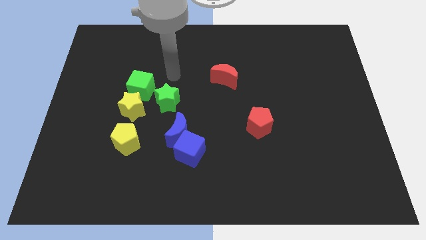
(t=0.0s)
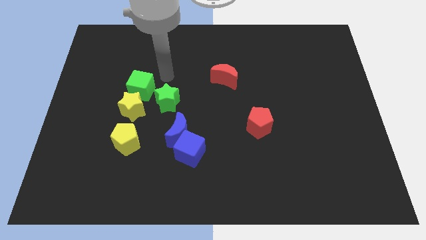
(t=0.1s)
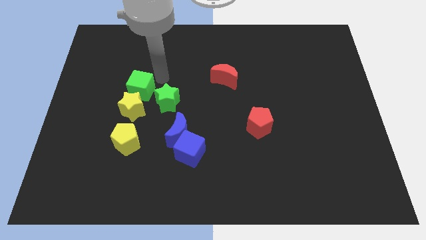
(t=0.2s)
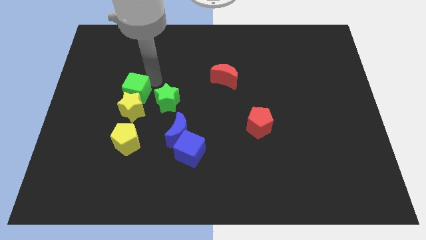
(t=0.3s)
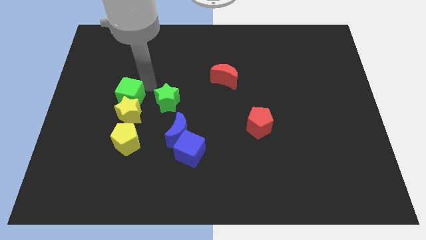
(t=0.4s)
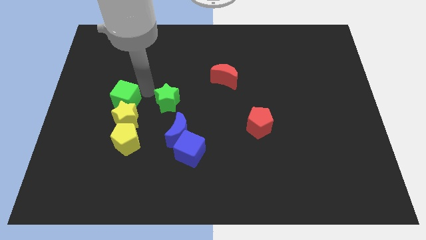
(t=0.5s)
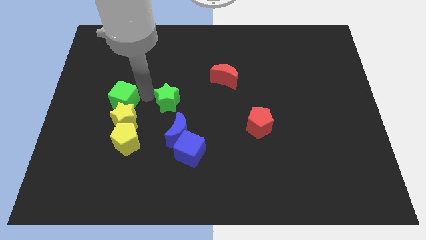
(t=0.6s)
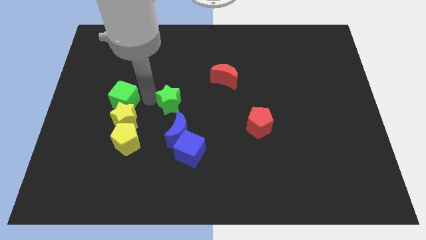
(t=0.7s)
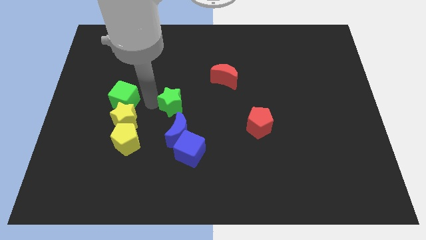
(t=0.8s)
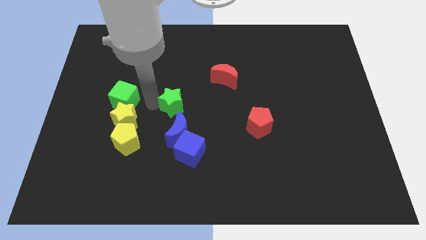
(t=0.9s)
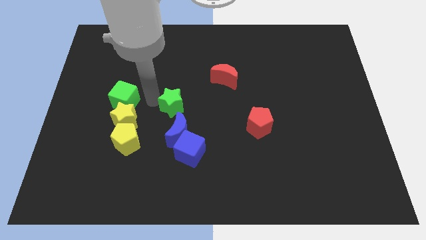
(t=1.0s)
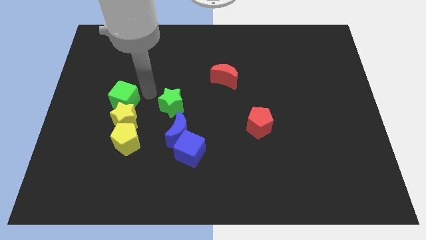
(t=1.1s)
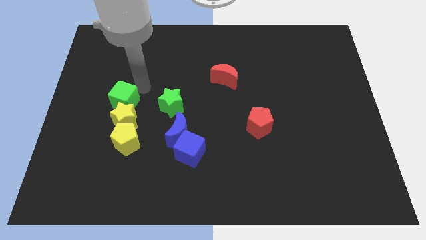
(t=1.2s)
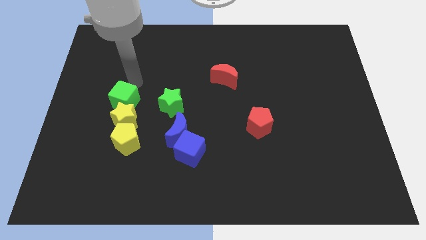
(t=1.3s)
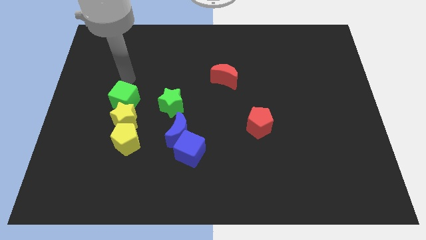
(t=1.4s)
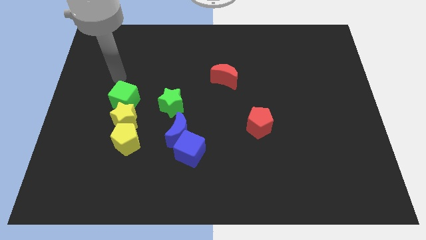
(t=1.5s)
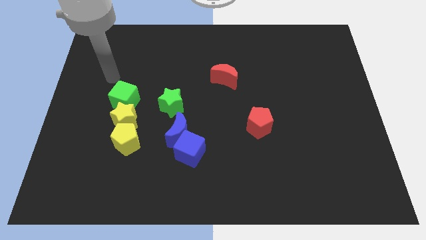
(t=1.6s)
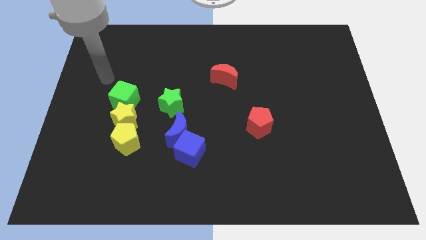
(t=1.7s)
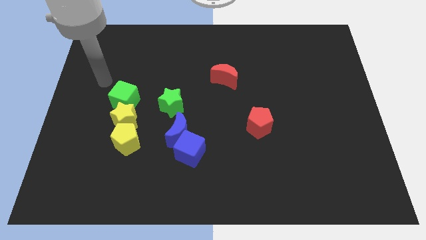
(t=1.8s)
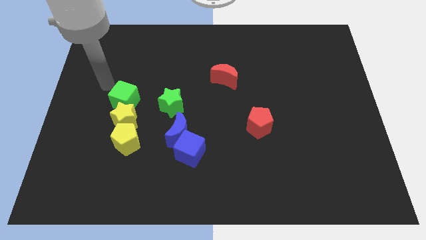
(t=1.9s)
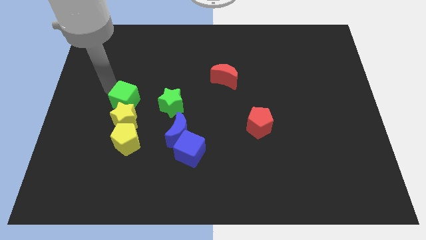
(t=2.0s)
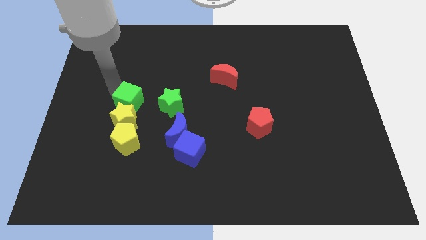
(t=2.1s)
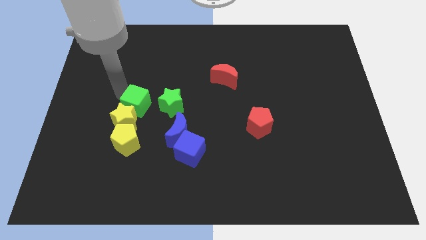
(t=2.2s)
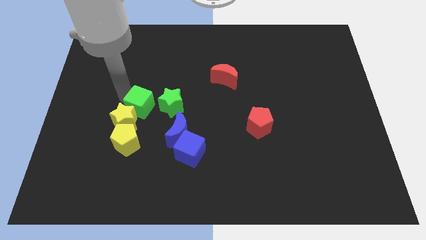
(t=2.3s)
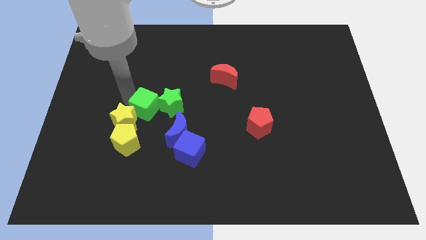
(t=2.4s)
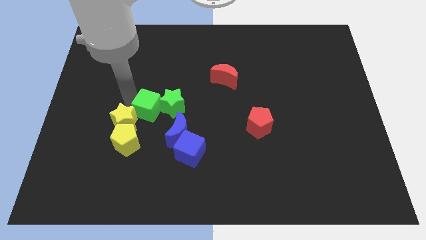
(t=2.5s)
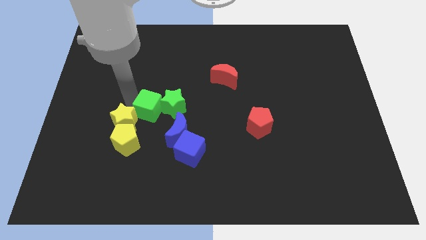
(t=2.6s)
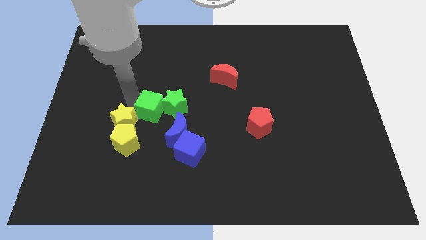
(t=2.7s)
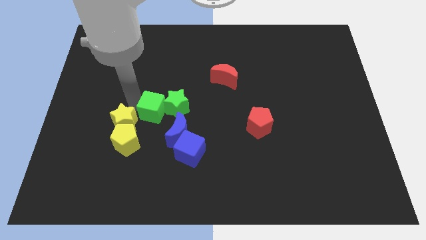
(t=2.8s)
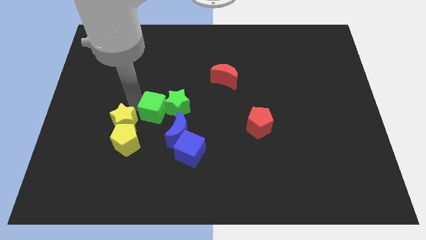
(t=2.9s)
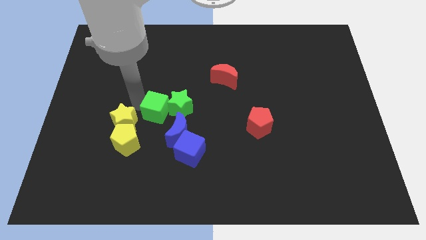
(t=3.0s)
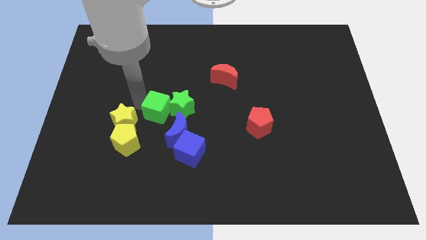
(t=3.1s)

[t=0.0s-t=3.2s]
place the green star above the blue crescent

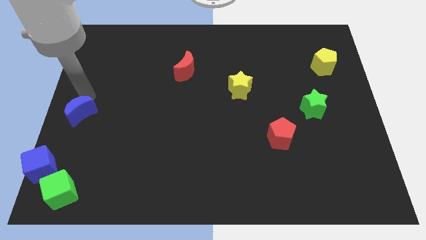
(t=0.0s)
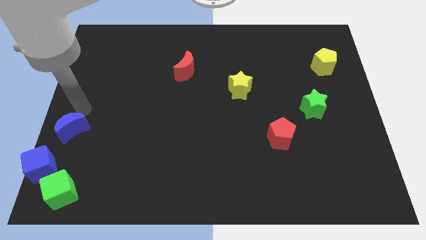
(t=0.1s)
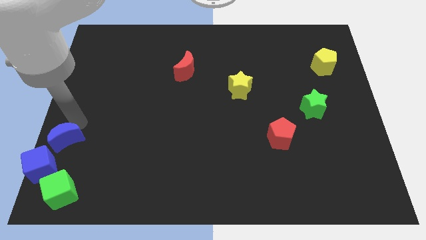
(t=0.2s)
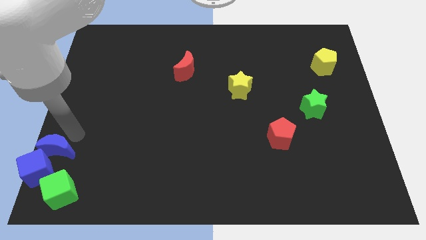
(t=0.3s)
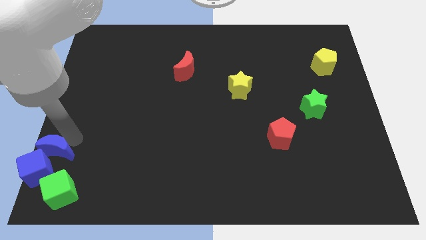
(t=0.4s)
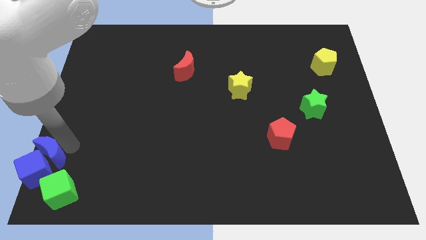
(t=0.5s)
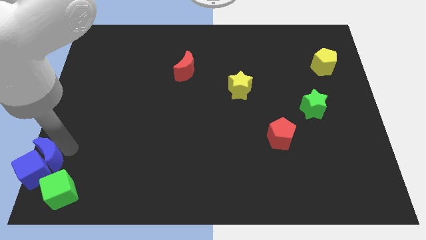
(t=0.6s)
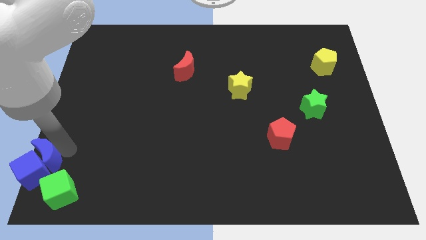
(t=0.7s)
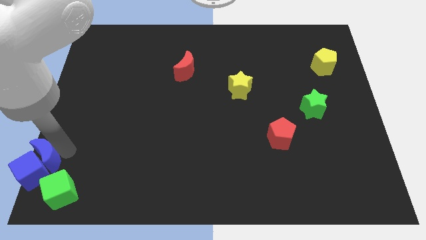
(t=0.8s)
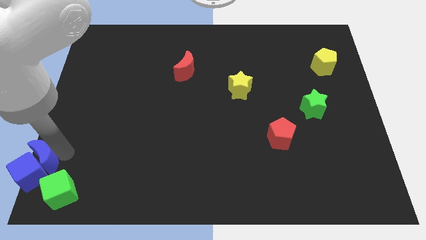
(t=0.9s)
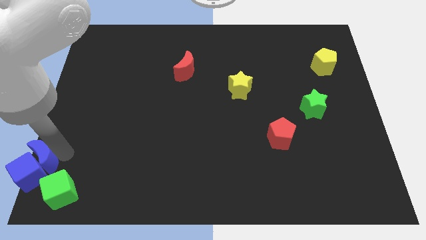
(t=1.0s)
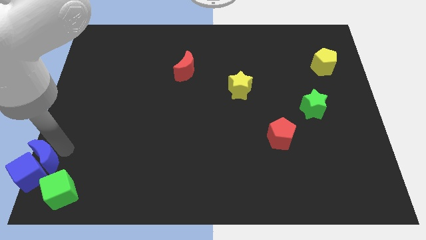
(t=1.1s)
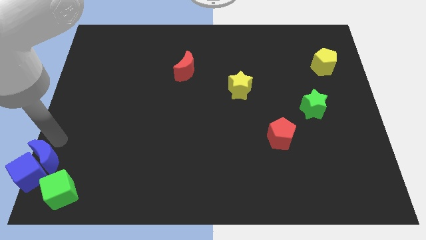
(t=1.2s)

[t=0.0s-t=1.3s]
push the blue moon into the blue cube

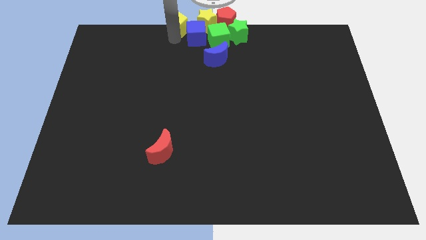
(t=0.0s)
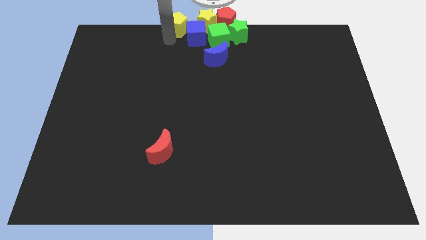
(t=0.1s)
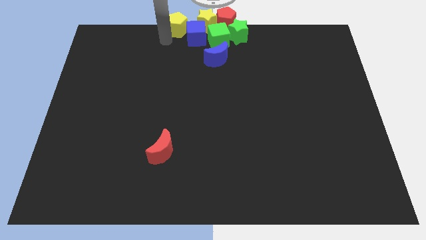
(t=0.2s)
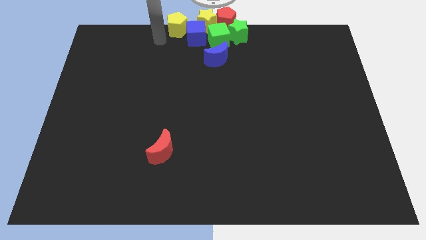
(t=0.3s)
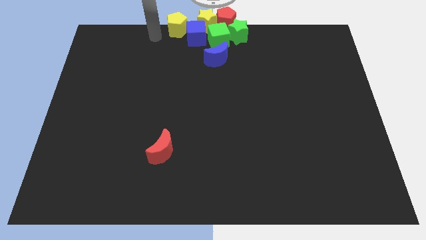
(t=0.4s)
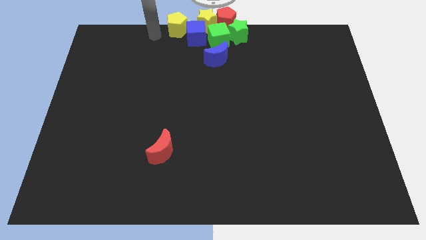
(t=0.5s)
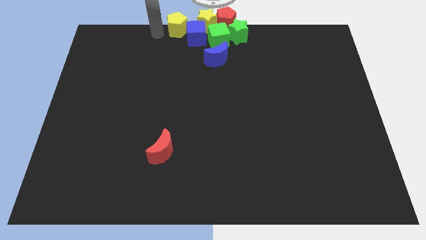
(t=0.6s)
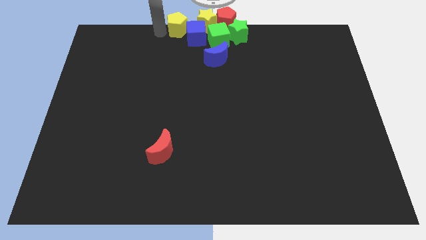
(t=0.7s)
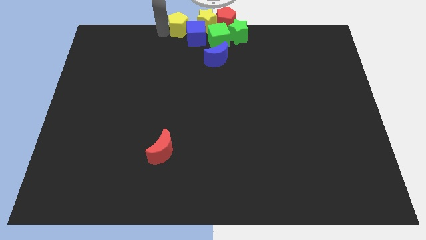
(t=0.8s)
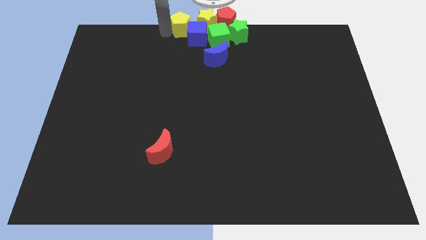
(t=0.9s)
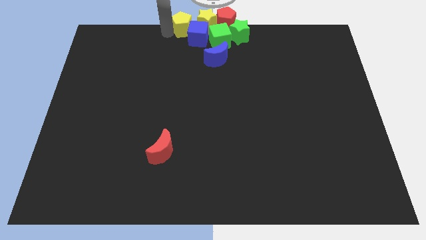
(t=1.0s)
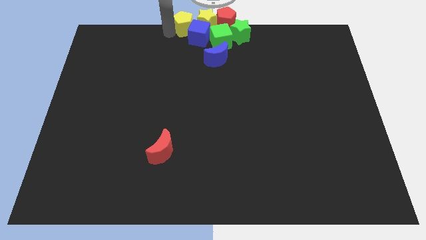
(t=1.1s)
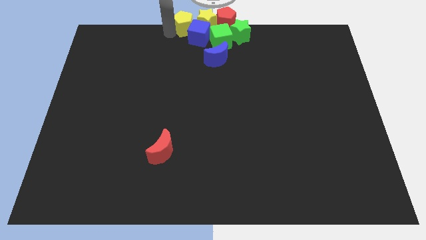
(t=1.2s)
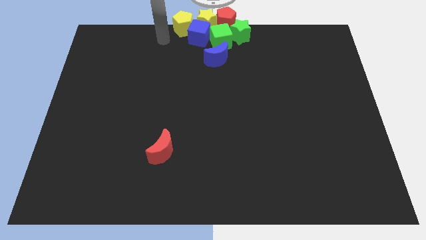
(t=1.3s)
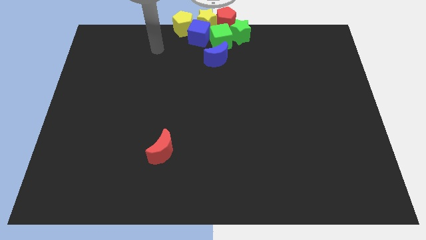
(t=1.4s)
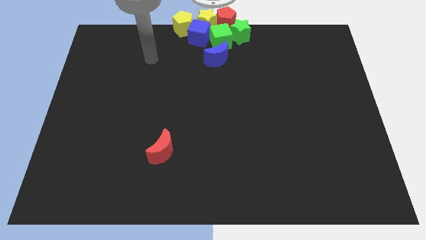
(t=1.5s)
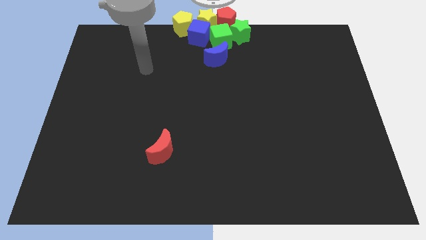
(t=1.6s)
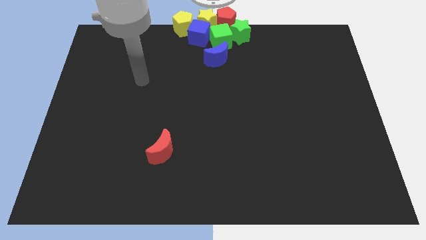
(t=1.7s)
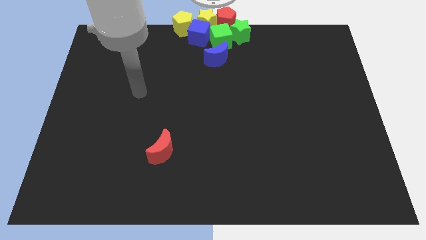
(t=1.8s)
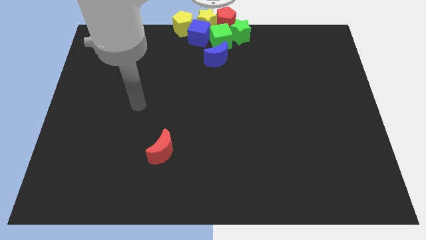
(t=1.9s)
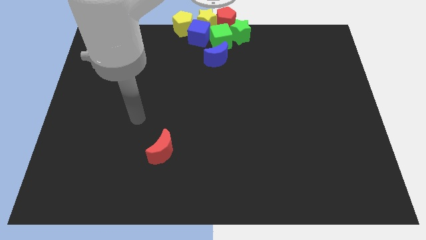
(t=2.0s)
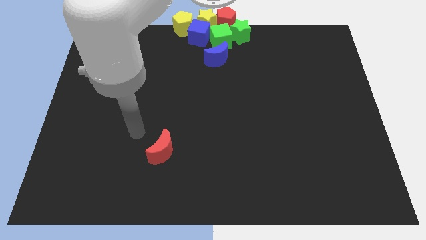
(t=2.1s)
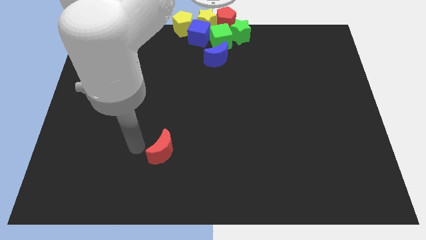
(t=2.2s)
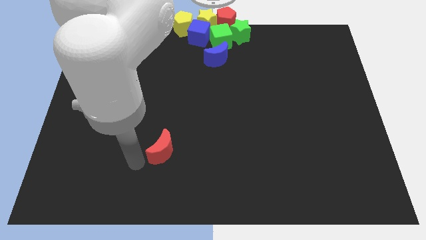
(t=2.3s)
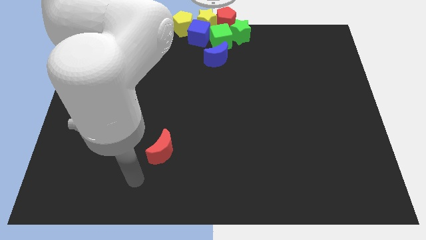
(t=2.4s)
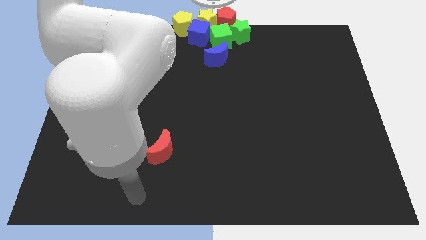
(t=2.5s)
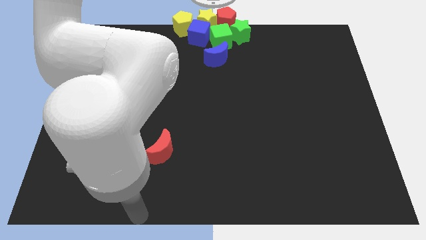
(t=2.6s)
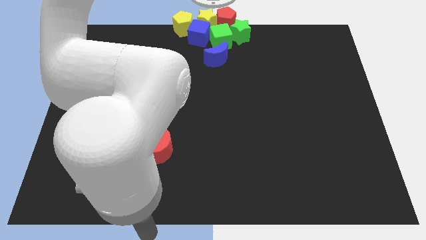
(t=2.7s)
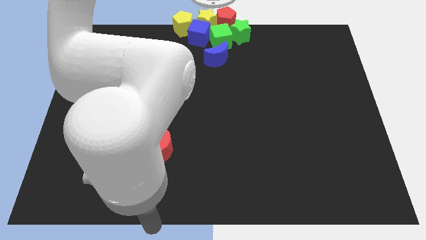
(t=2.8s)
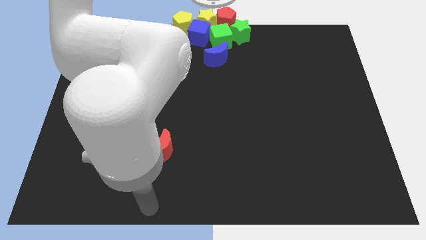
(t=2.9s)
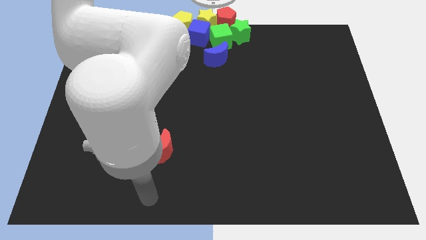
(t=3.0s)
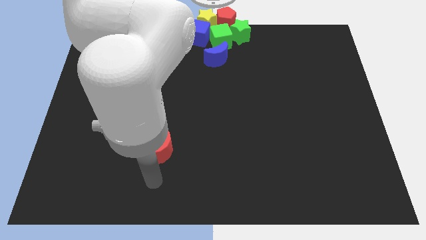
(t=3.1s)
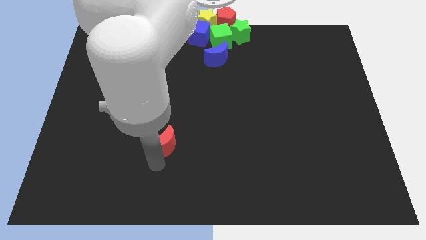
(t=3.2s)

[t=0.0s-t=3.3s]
move the arm towards the red crescent

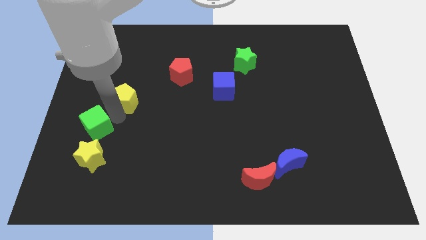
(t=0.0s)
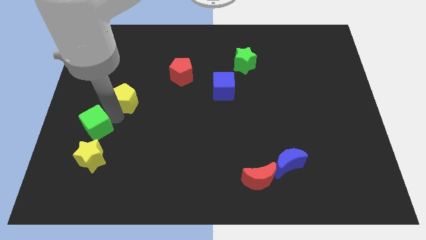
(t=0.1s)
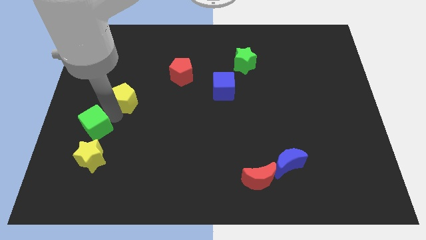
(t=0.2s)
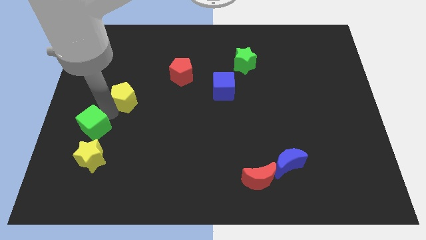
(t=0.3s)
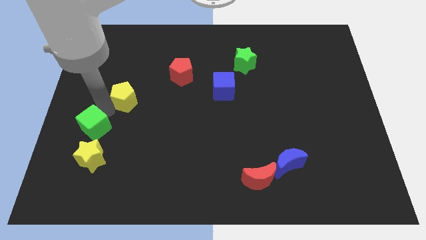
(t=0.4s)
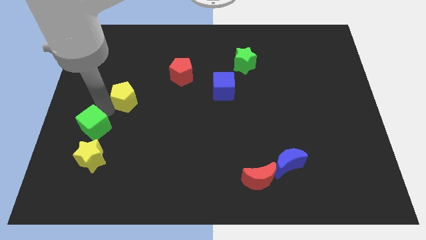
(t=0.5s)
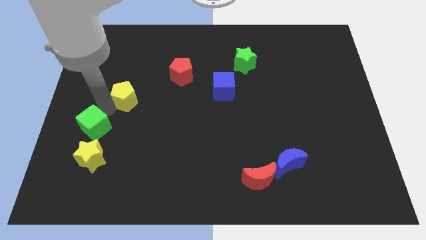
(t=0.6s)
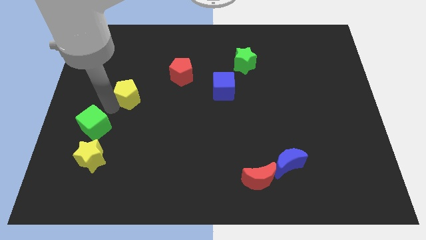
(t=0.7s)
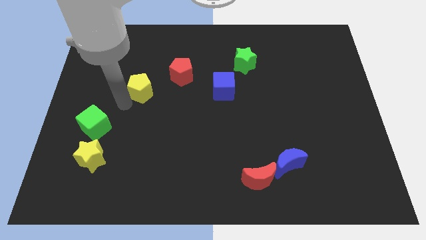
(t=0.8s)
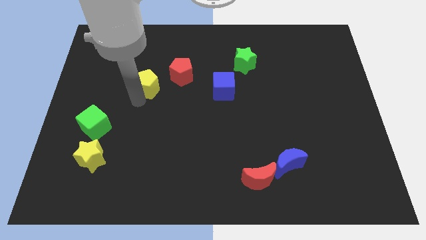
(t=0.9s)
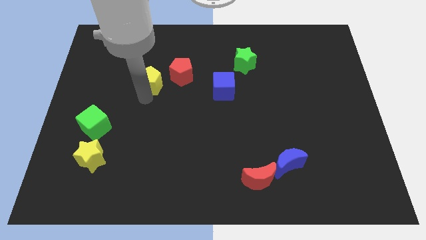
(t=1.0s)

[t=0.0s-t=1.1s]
separate the yellow pentagon from the green cube
